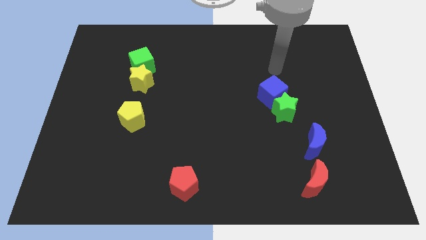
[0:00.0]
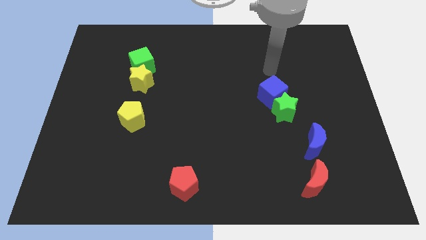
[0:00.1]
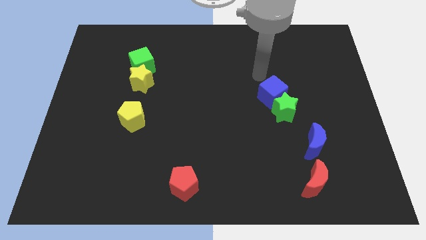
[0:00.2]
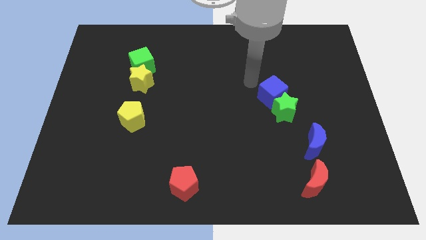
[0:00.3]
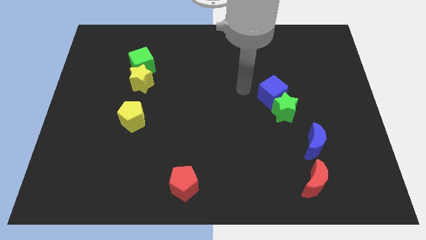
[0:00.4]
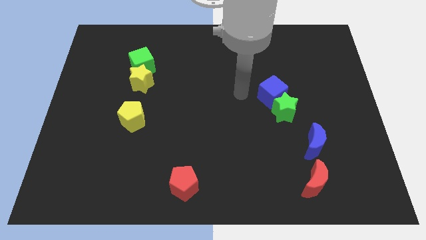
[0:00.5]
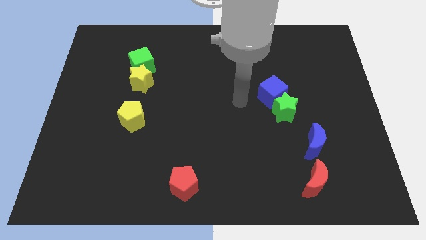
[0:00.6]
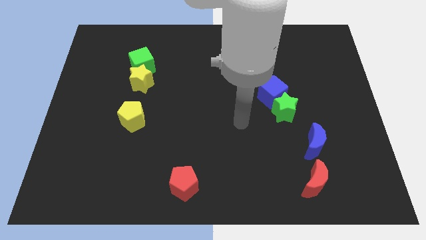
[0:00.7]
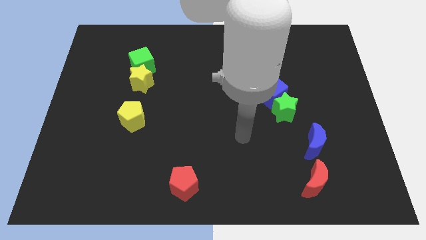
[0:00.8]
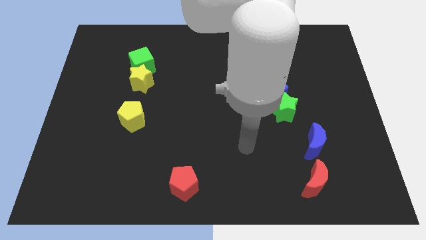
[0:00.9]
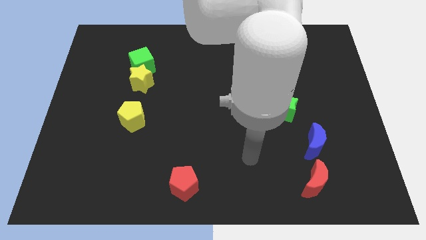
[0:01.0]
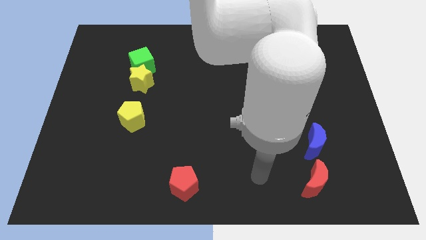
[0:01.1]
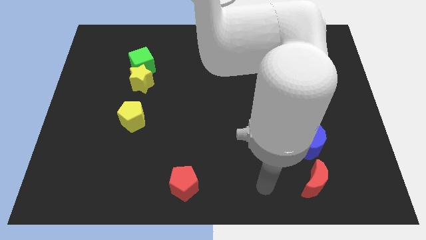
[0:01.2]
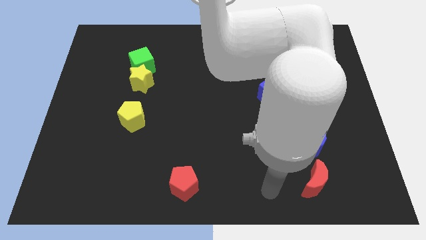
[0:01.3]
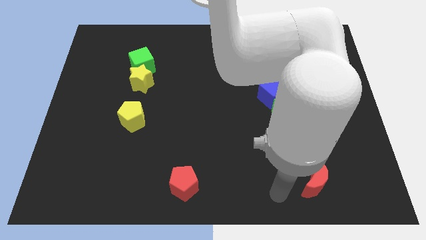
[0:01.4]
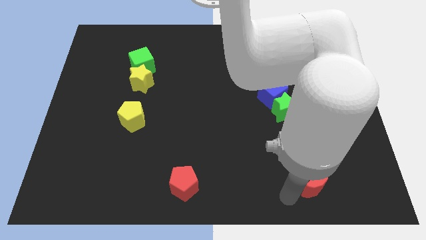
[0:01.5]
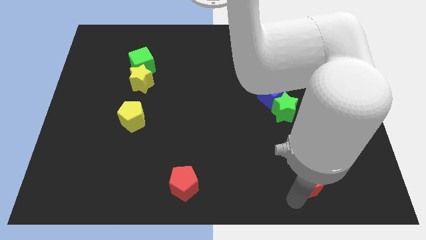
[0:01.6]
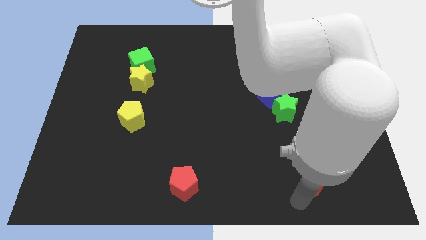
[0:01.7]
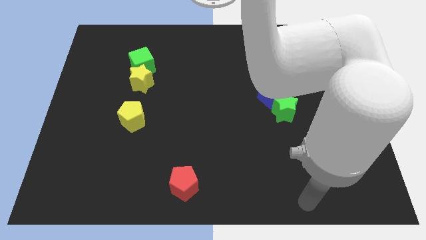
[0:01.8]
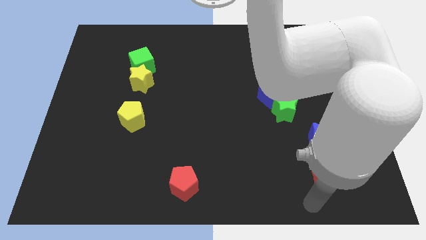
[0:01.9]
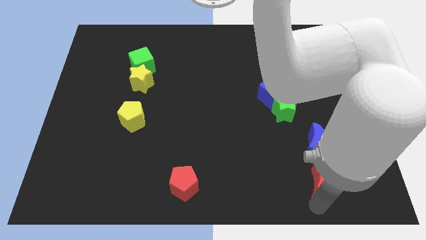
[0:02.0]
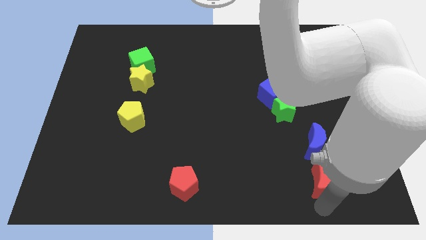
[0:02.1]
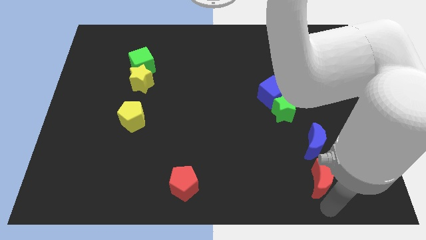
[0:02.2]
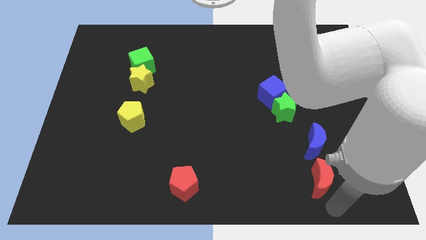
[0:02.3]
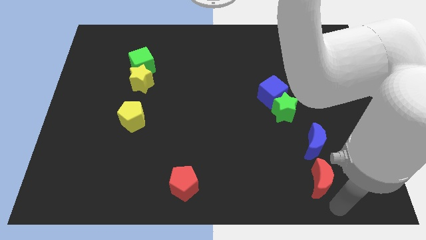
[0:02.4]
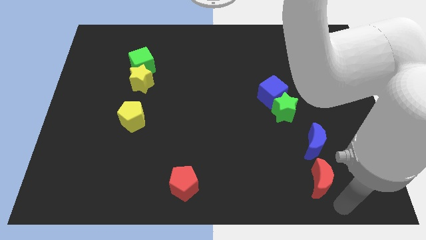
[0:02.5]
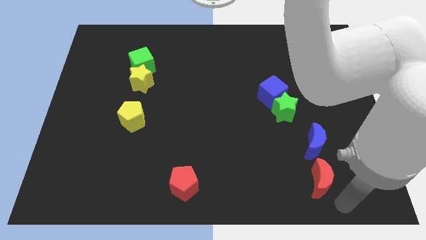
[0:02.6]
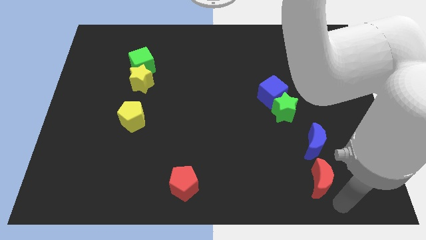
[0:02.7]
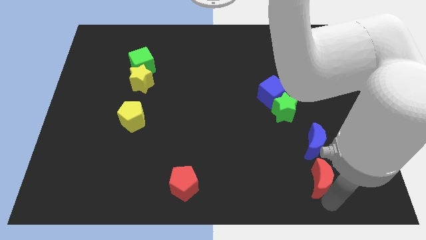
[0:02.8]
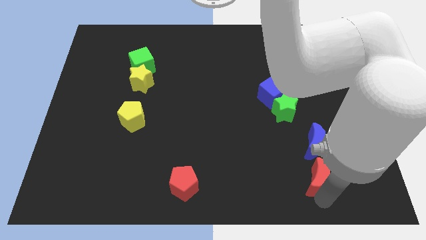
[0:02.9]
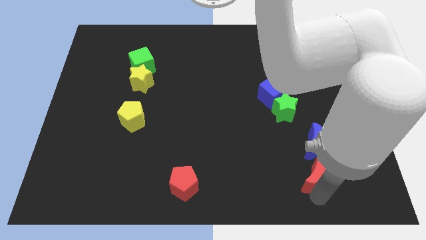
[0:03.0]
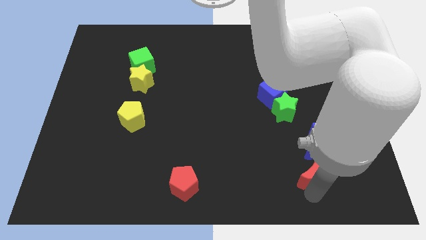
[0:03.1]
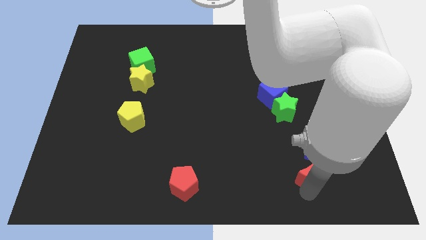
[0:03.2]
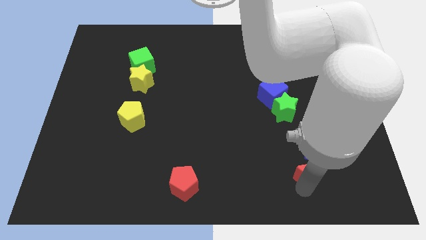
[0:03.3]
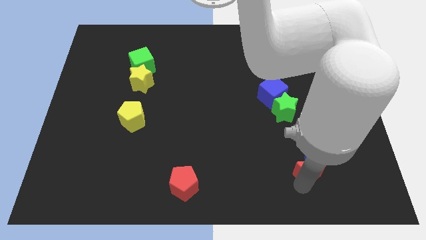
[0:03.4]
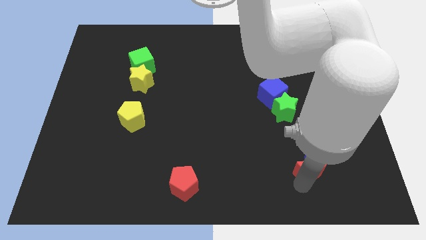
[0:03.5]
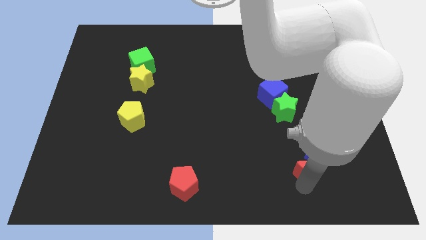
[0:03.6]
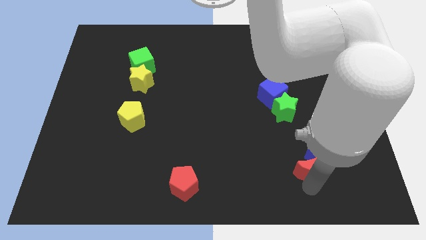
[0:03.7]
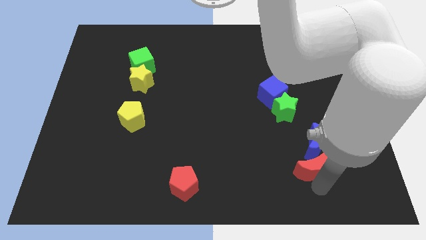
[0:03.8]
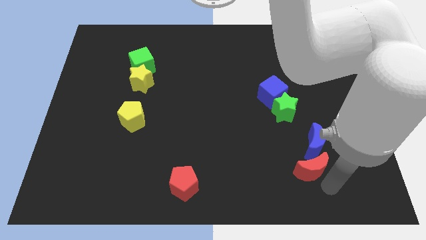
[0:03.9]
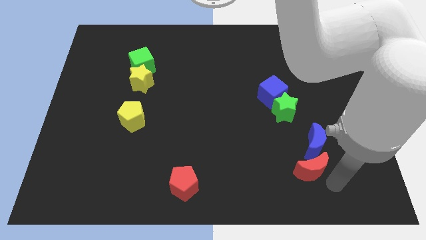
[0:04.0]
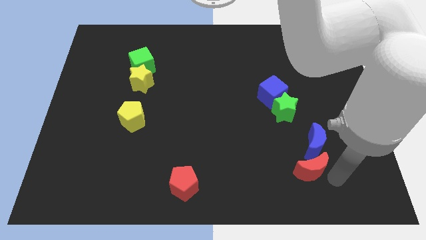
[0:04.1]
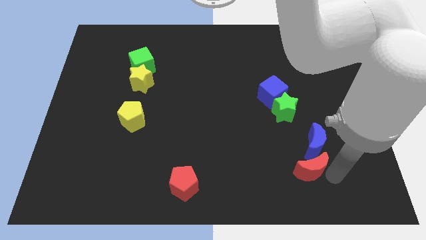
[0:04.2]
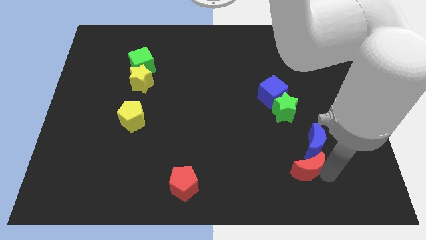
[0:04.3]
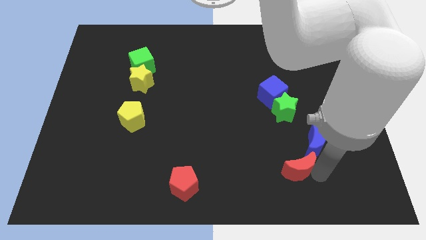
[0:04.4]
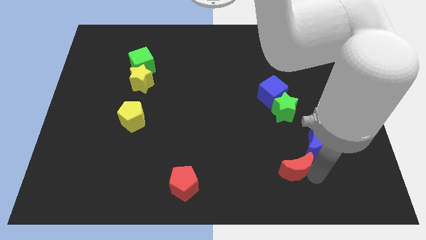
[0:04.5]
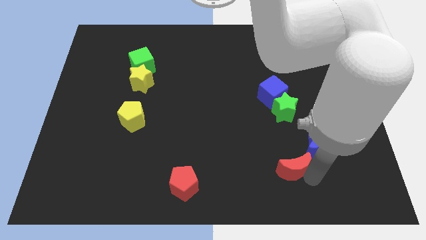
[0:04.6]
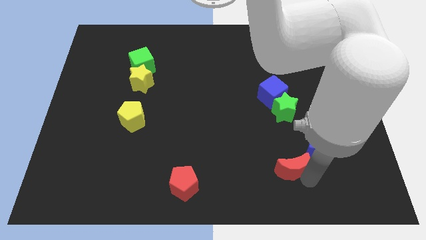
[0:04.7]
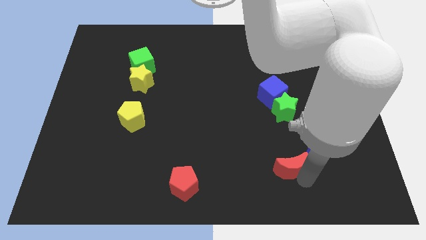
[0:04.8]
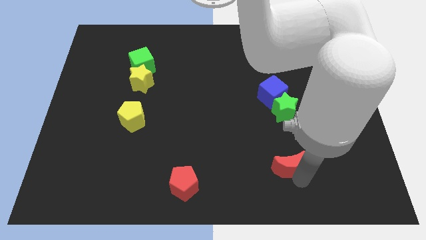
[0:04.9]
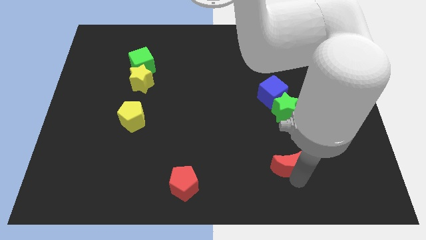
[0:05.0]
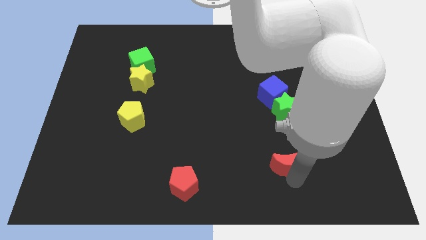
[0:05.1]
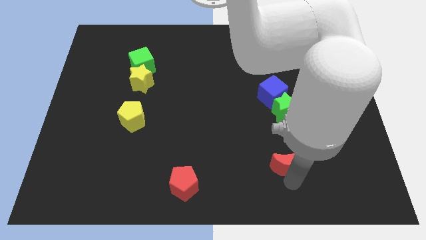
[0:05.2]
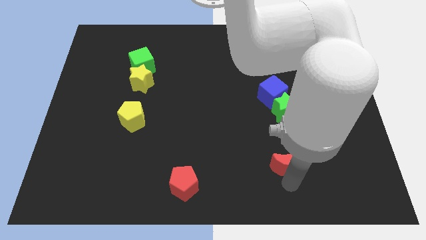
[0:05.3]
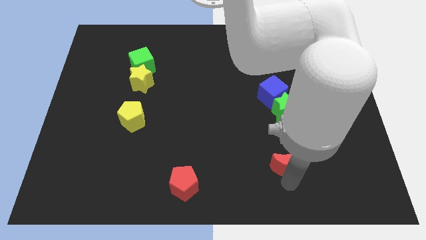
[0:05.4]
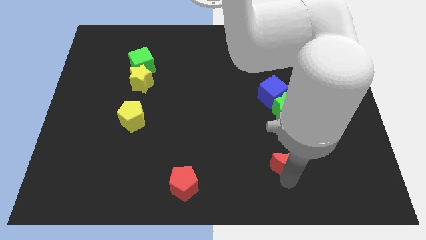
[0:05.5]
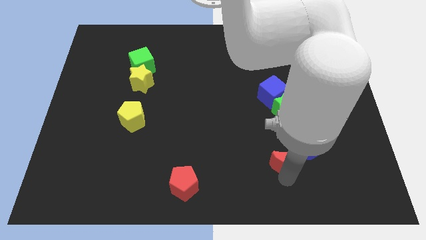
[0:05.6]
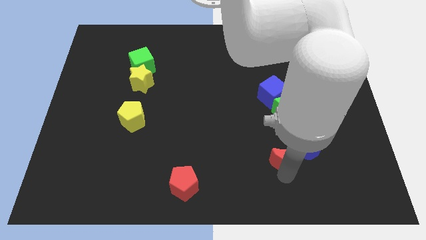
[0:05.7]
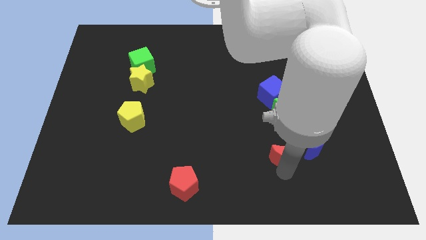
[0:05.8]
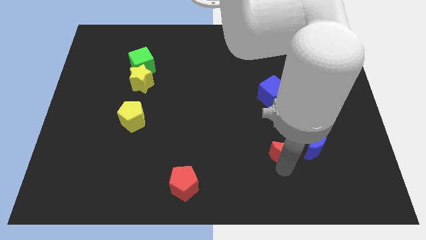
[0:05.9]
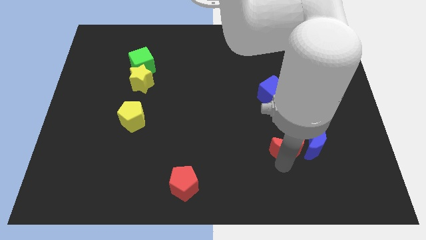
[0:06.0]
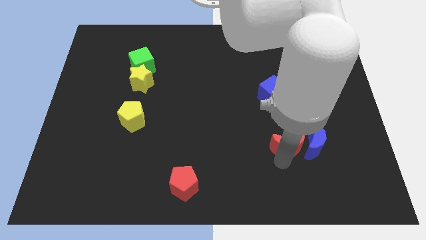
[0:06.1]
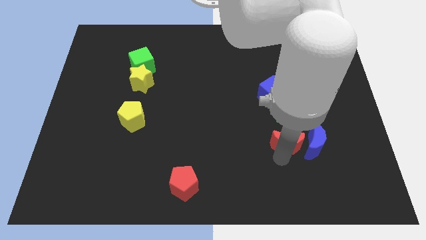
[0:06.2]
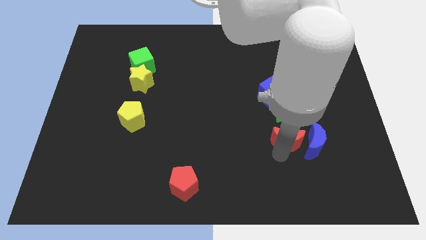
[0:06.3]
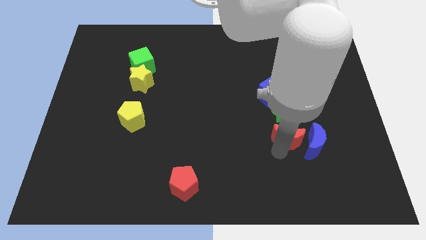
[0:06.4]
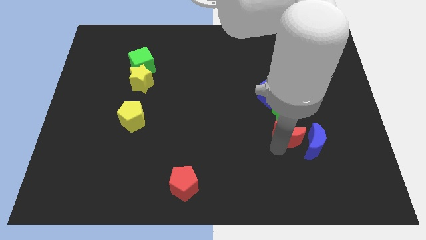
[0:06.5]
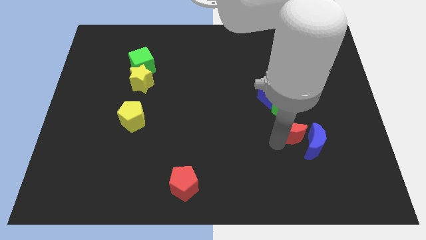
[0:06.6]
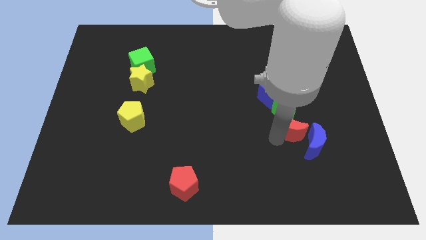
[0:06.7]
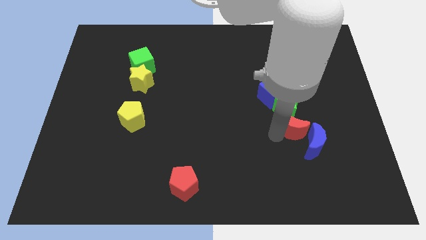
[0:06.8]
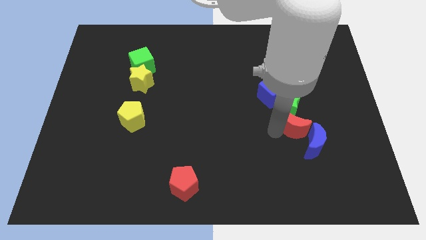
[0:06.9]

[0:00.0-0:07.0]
push the red moon to the green star

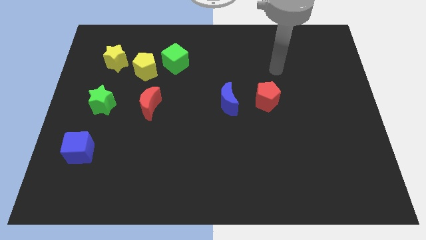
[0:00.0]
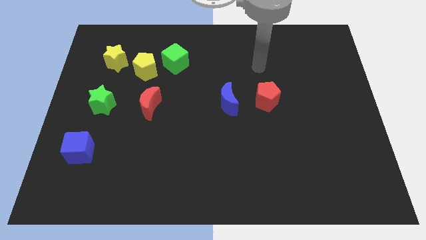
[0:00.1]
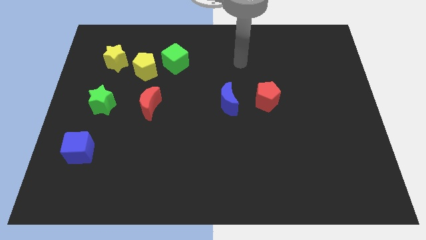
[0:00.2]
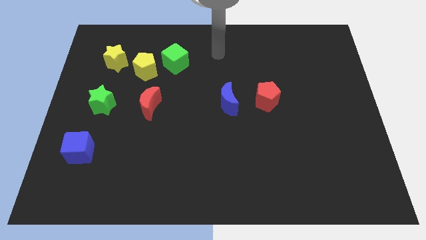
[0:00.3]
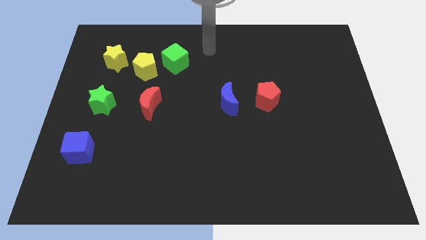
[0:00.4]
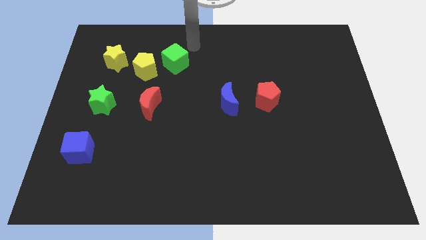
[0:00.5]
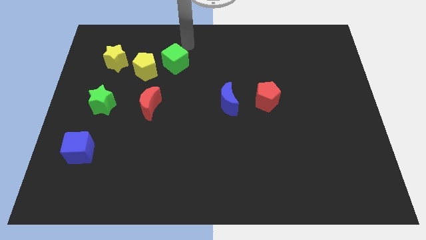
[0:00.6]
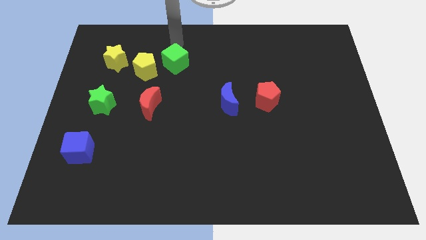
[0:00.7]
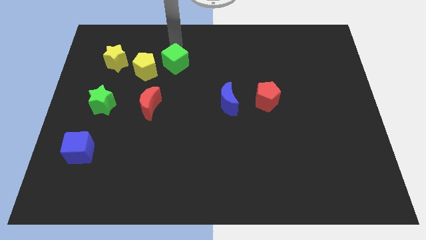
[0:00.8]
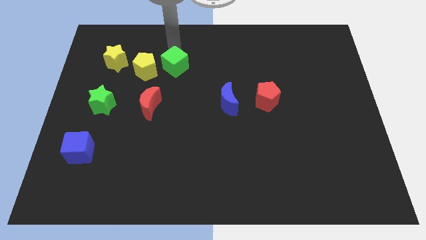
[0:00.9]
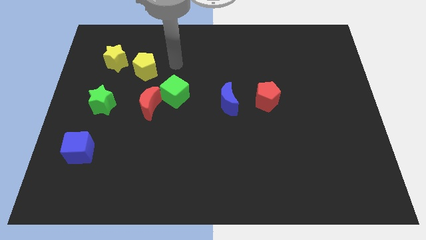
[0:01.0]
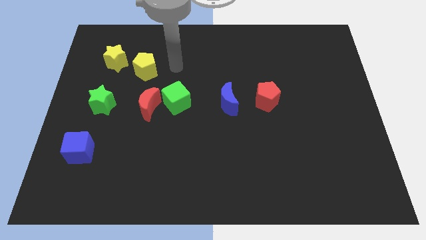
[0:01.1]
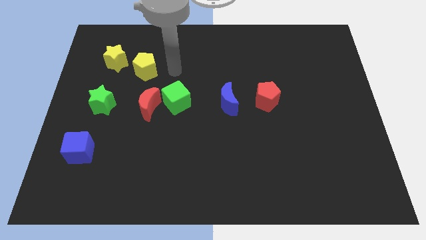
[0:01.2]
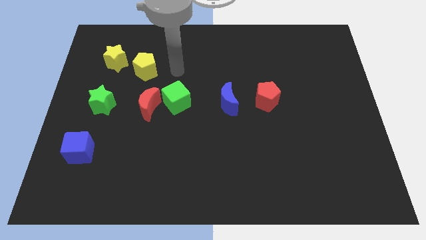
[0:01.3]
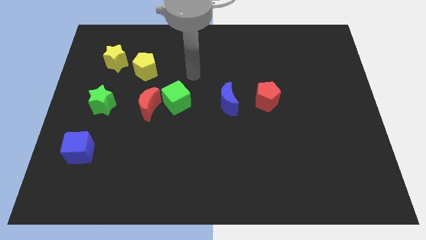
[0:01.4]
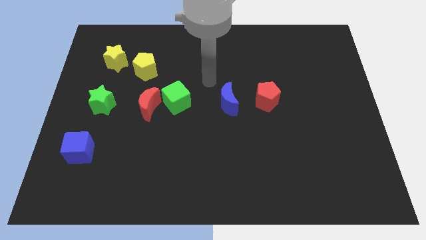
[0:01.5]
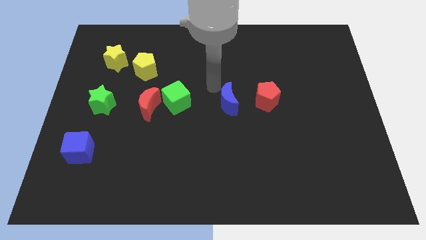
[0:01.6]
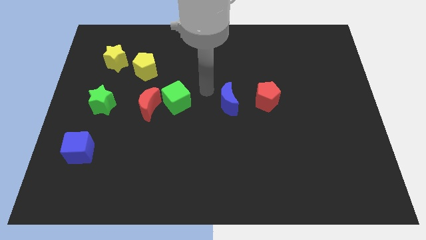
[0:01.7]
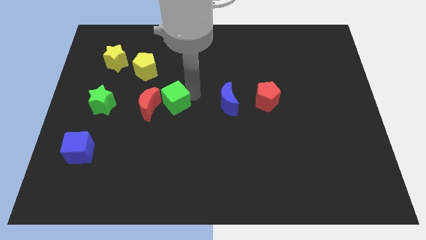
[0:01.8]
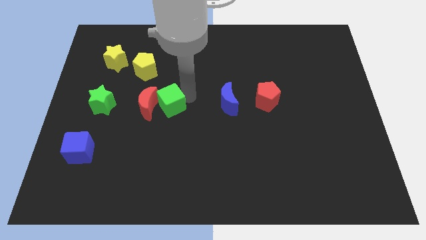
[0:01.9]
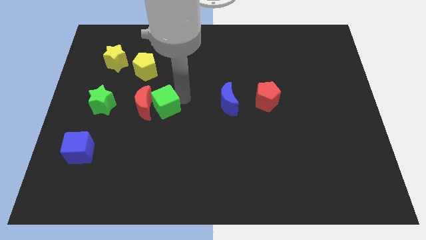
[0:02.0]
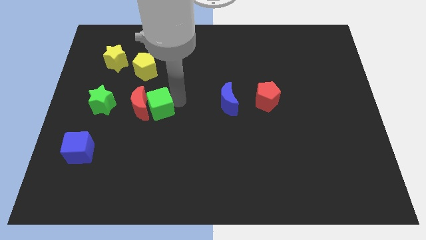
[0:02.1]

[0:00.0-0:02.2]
put the green cube next to the red moon
